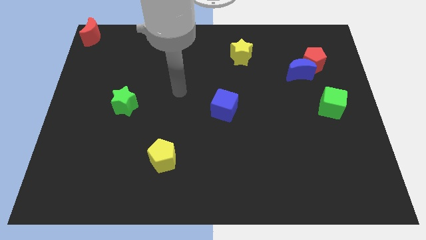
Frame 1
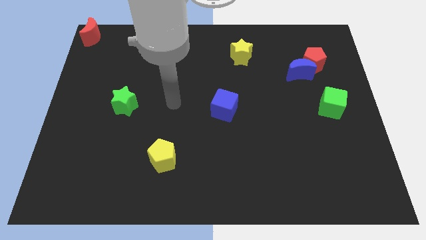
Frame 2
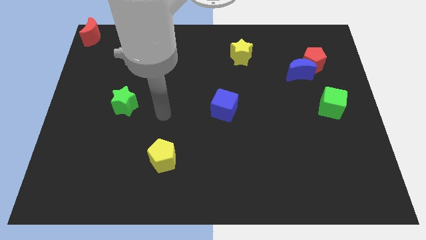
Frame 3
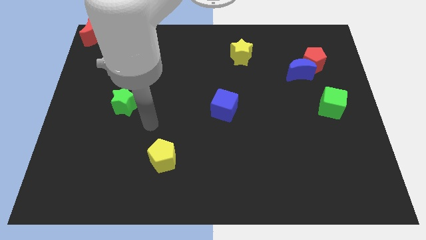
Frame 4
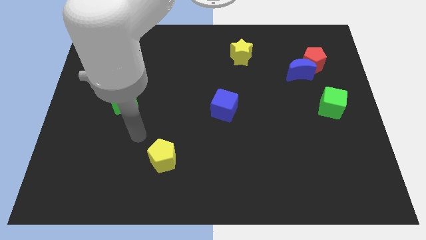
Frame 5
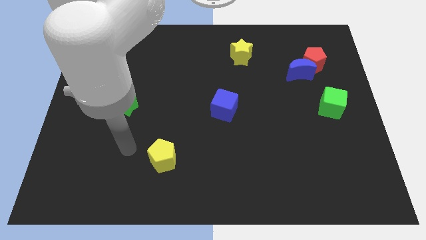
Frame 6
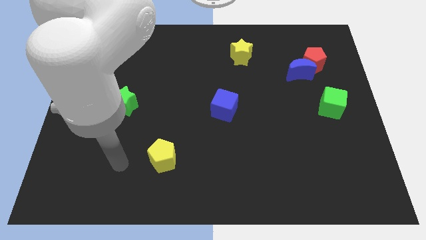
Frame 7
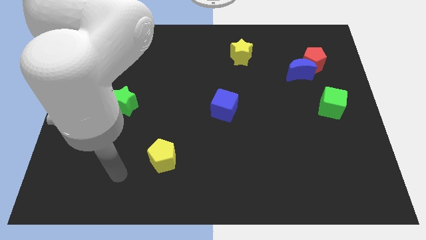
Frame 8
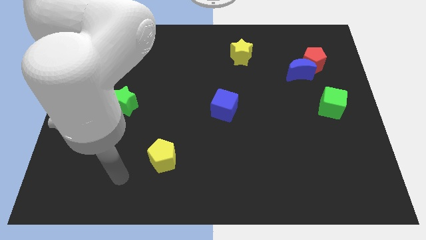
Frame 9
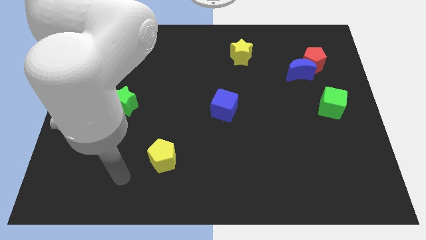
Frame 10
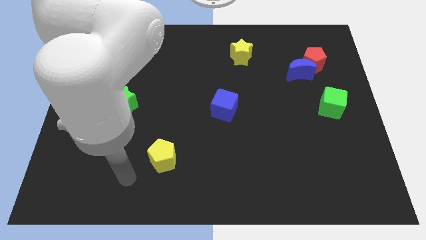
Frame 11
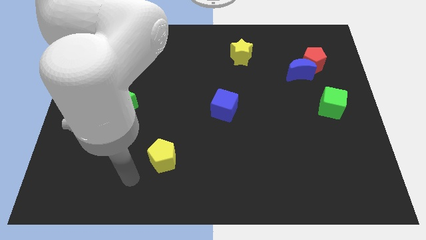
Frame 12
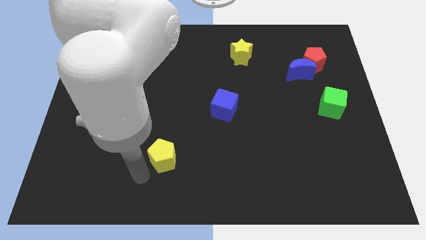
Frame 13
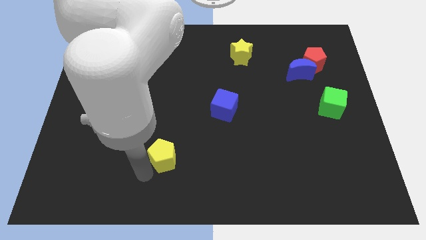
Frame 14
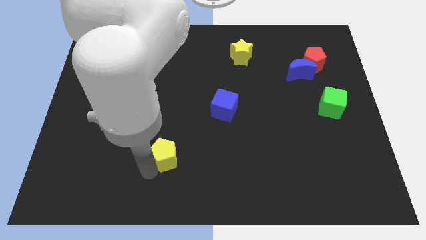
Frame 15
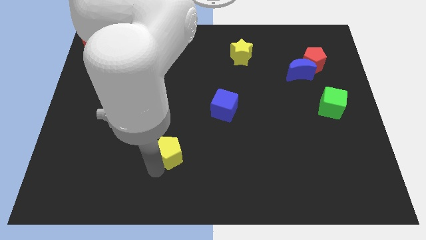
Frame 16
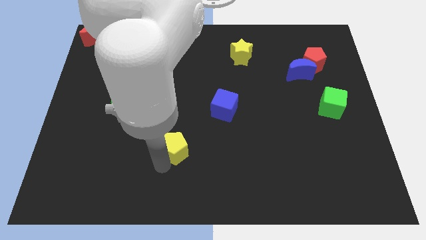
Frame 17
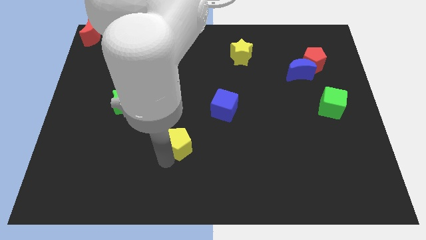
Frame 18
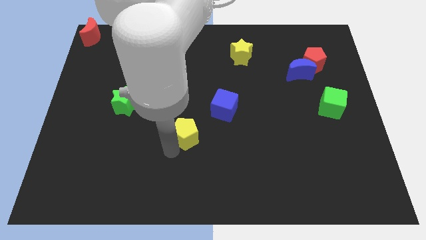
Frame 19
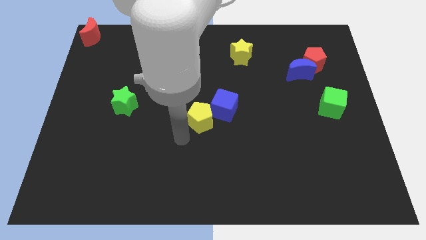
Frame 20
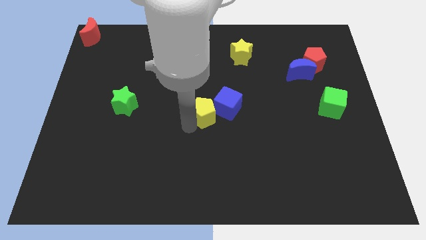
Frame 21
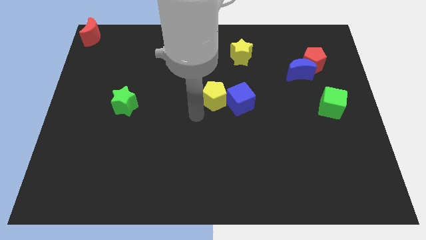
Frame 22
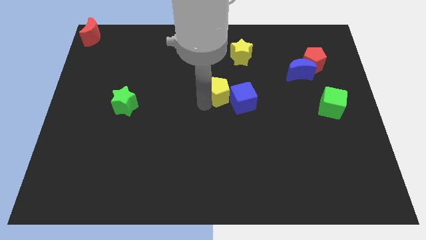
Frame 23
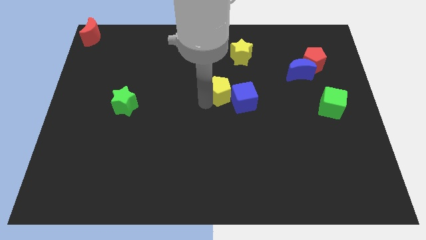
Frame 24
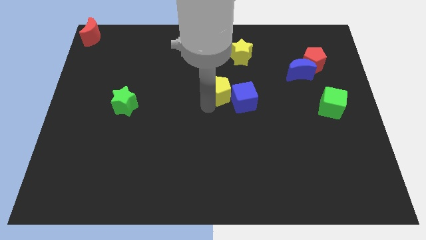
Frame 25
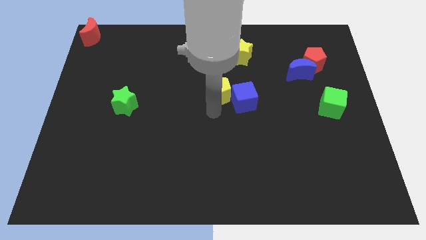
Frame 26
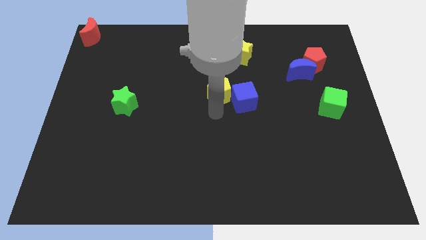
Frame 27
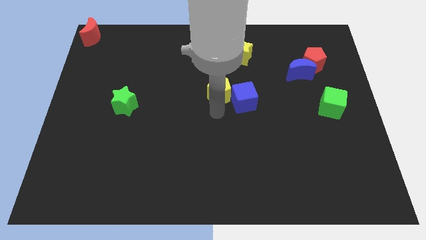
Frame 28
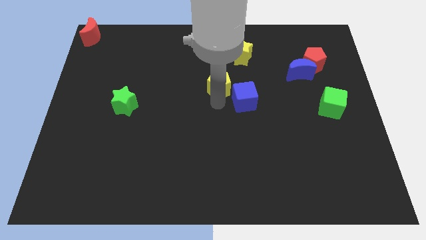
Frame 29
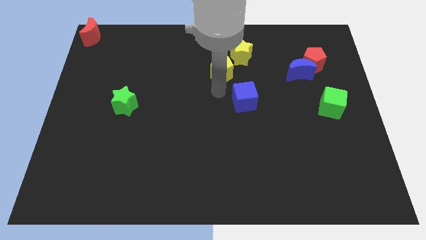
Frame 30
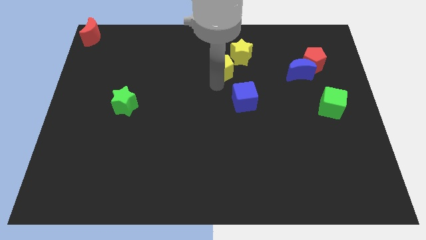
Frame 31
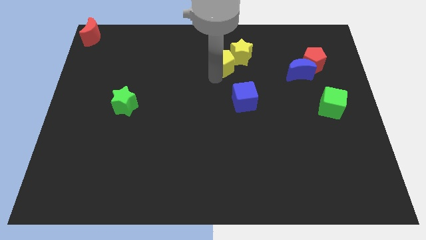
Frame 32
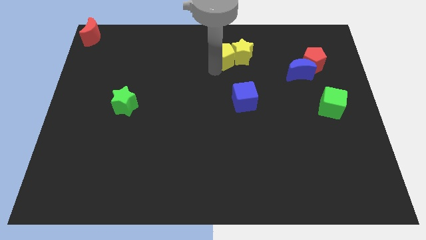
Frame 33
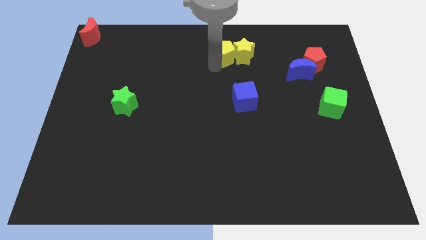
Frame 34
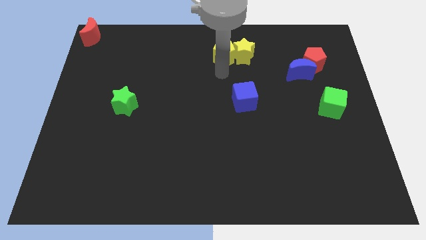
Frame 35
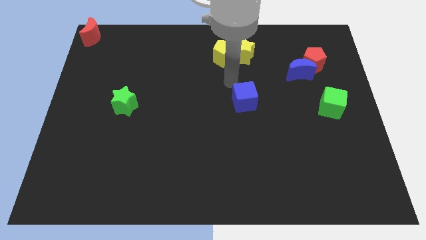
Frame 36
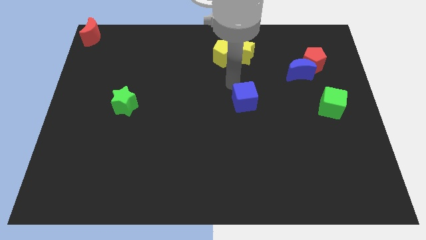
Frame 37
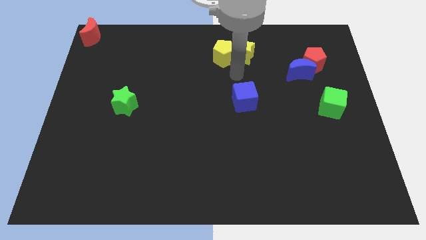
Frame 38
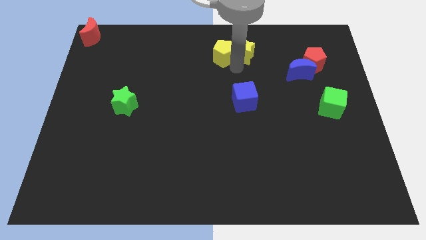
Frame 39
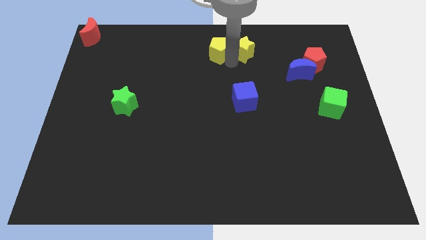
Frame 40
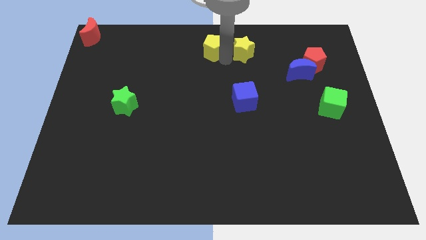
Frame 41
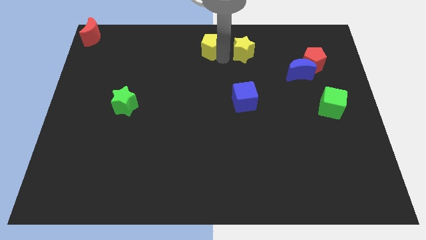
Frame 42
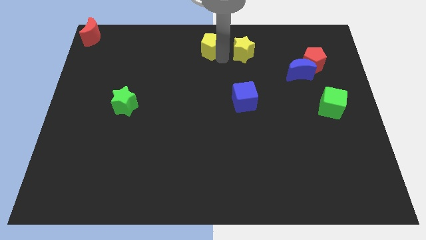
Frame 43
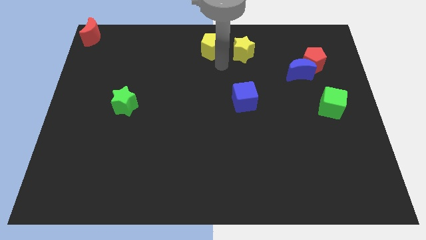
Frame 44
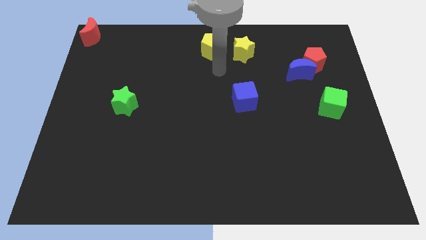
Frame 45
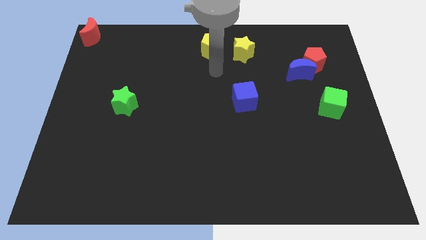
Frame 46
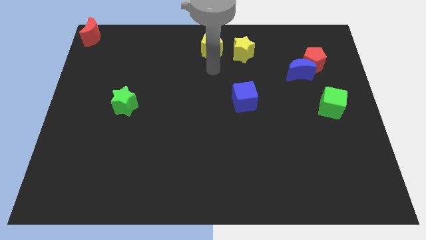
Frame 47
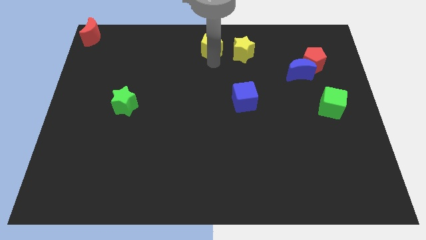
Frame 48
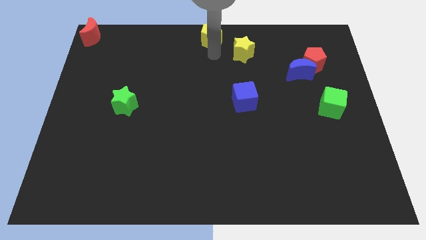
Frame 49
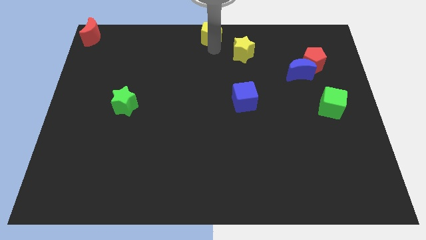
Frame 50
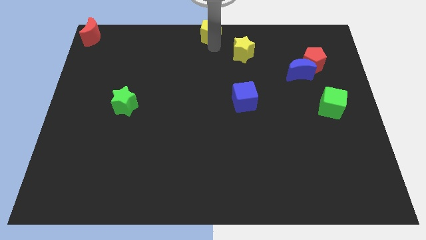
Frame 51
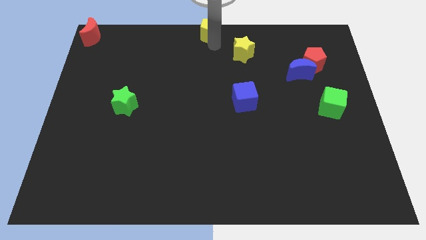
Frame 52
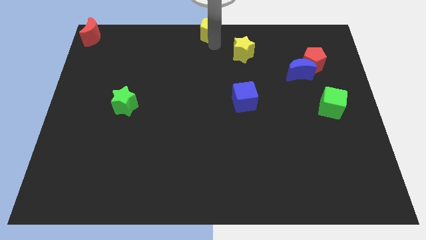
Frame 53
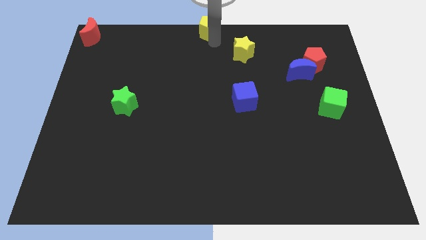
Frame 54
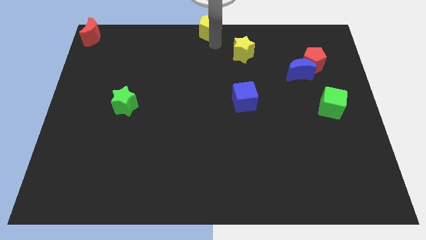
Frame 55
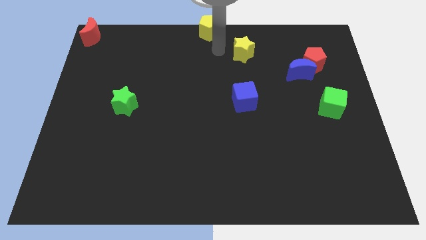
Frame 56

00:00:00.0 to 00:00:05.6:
move yellow pentagon to the top center of the board

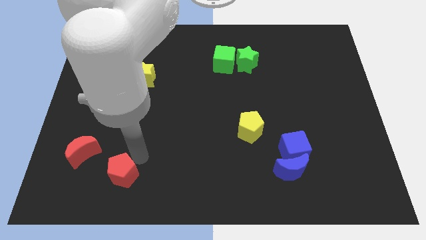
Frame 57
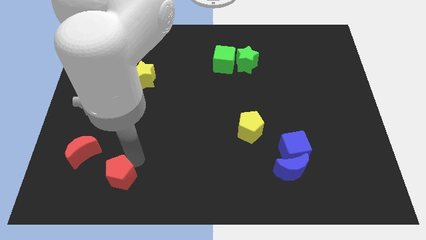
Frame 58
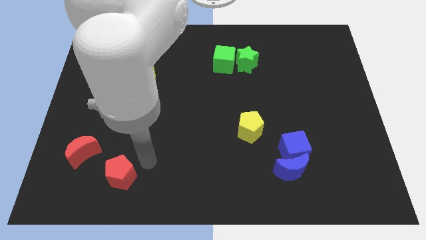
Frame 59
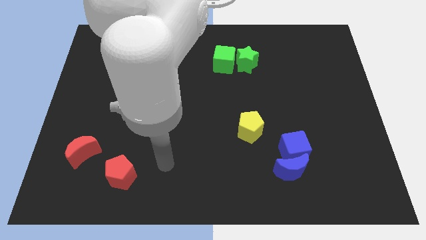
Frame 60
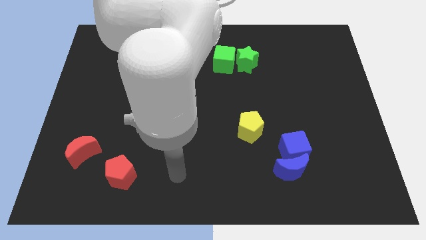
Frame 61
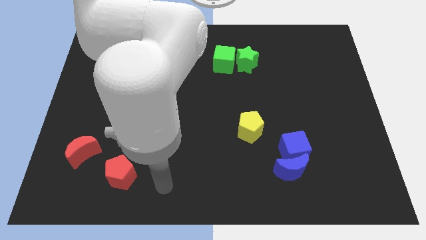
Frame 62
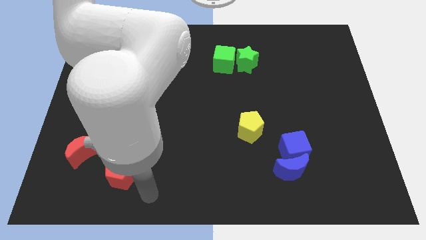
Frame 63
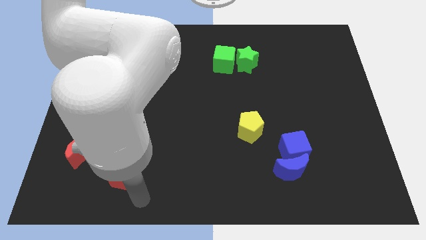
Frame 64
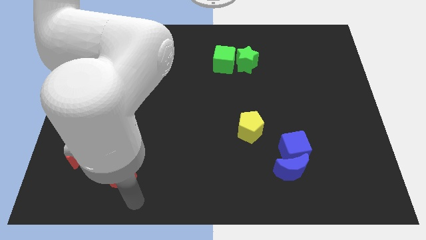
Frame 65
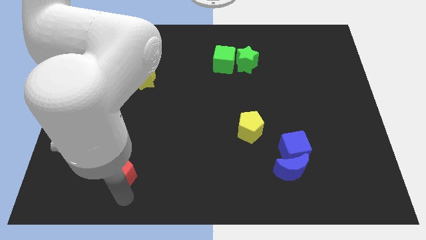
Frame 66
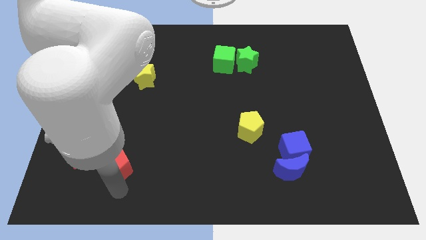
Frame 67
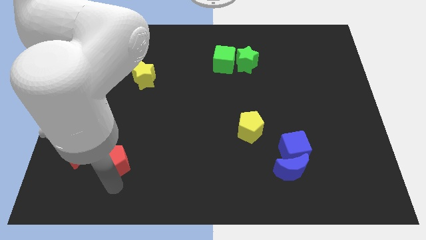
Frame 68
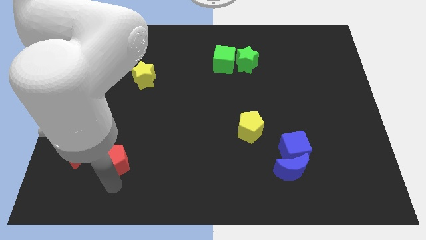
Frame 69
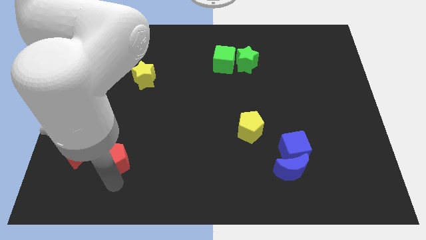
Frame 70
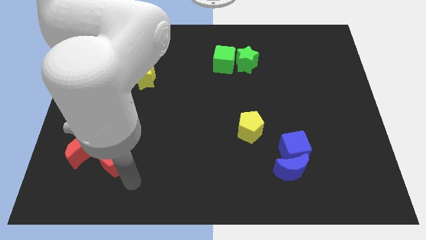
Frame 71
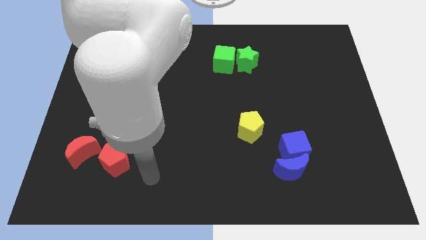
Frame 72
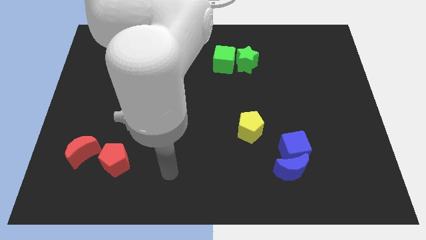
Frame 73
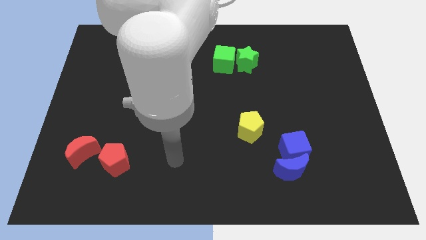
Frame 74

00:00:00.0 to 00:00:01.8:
put the red pentagon to the right side of red moon

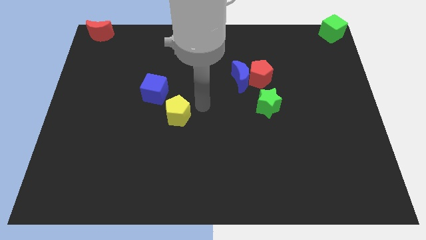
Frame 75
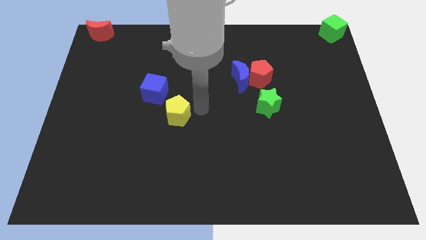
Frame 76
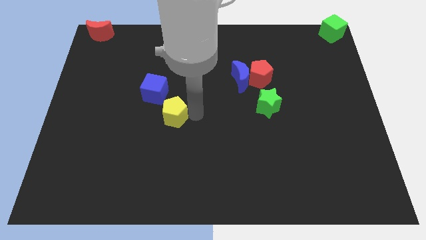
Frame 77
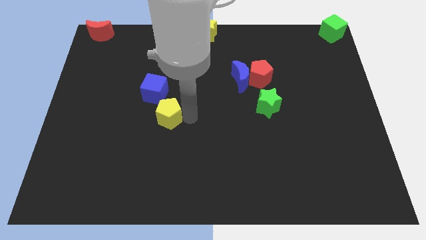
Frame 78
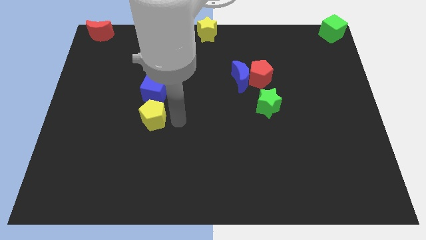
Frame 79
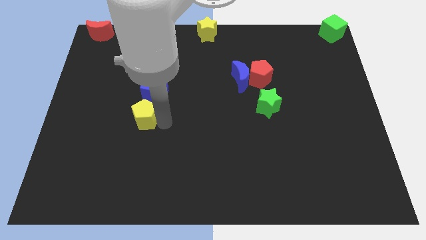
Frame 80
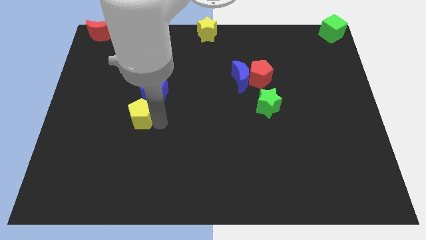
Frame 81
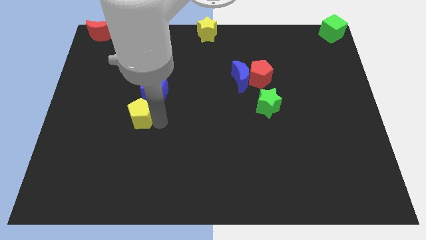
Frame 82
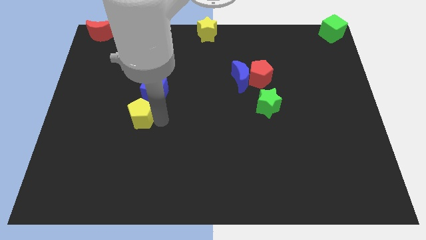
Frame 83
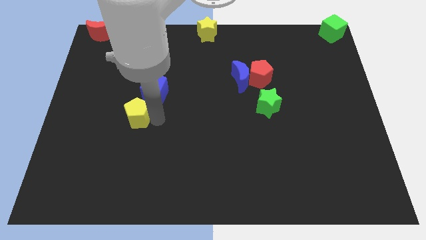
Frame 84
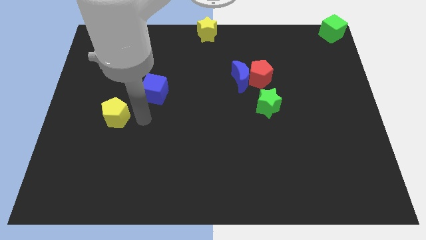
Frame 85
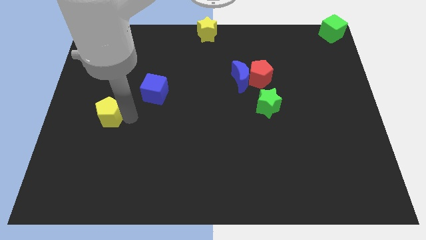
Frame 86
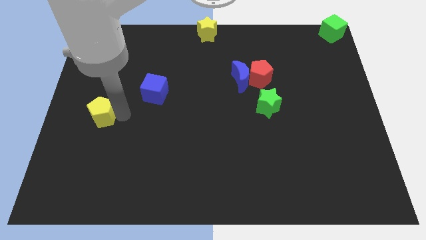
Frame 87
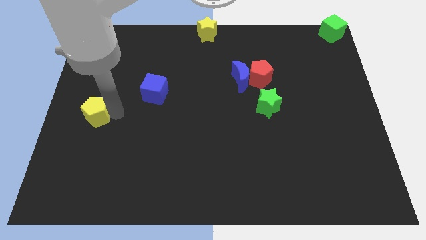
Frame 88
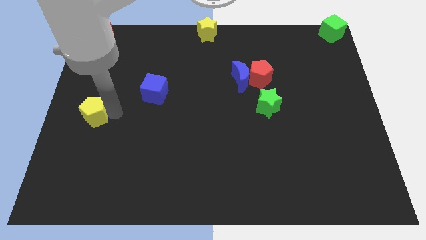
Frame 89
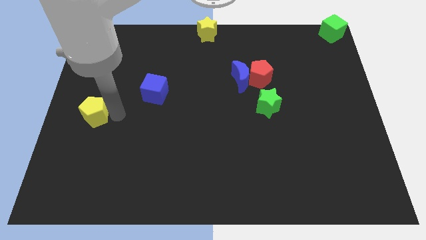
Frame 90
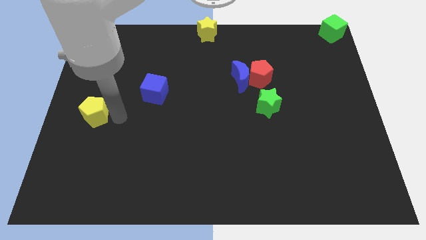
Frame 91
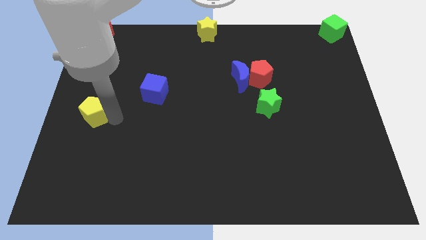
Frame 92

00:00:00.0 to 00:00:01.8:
push the yellow pentagon to the left center of the board
